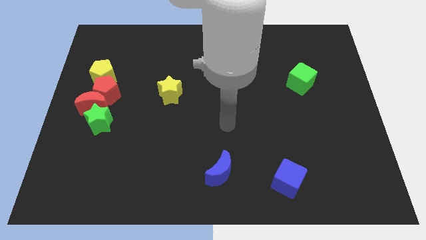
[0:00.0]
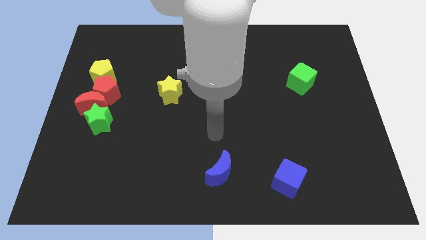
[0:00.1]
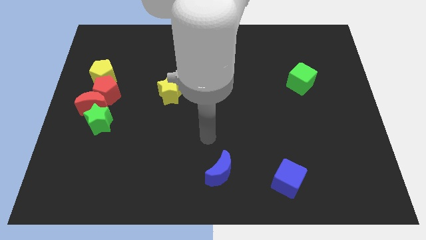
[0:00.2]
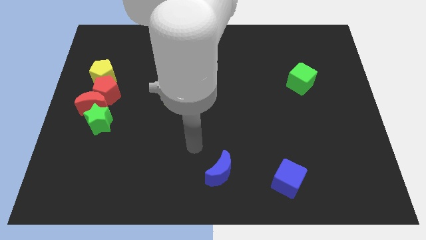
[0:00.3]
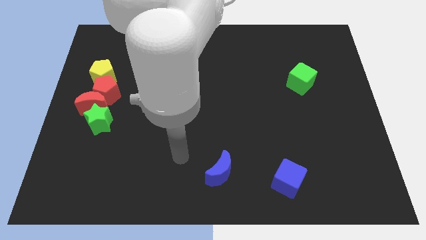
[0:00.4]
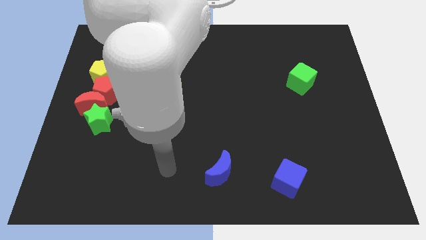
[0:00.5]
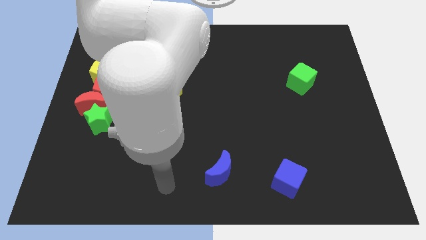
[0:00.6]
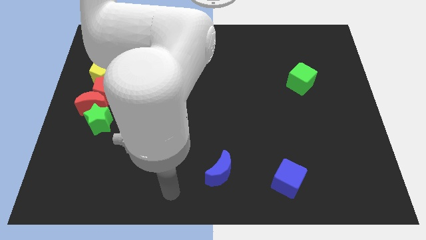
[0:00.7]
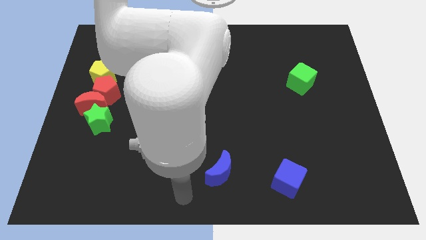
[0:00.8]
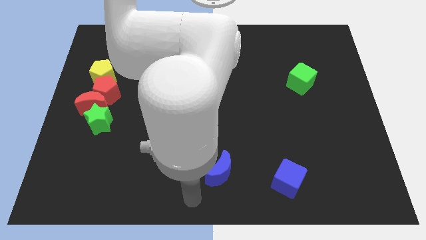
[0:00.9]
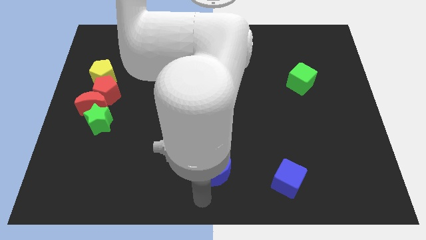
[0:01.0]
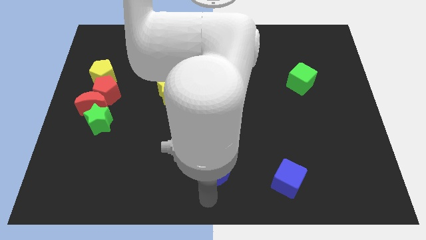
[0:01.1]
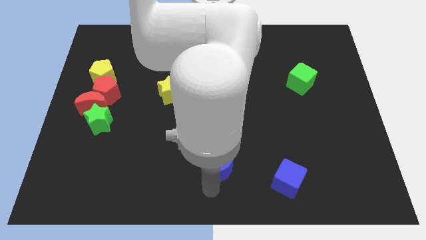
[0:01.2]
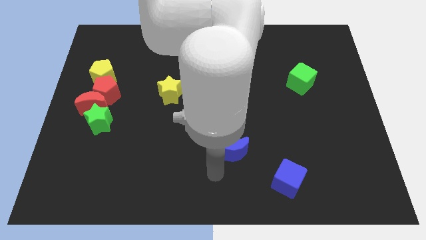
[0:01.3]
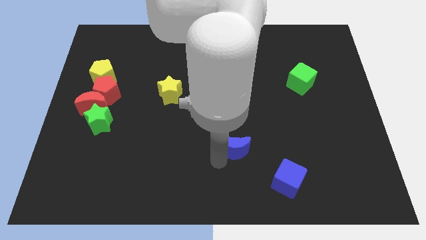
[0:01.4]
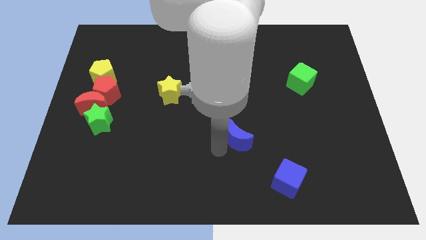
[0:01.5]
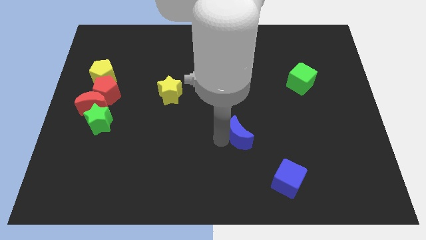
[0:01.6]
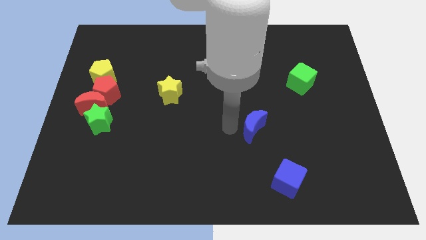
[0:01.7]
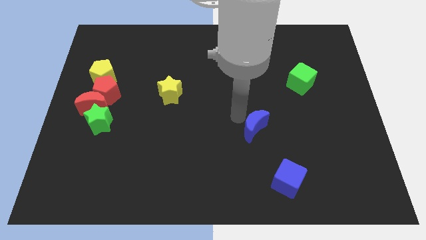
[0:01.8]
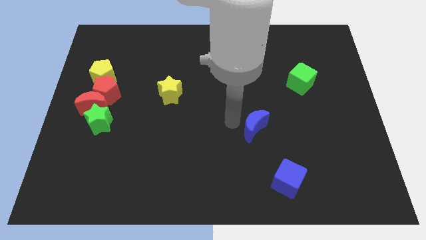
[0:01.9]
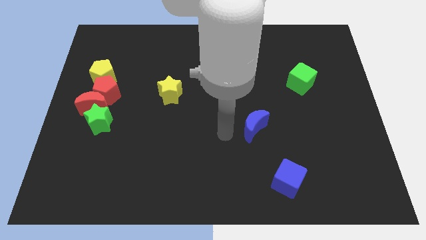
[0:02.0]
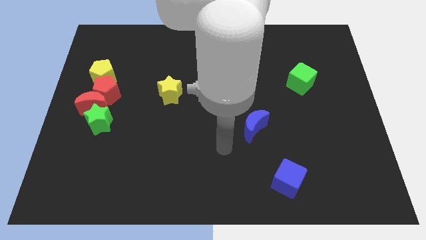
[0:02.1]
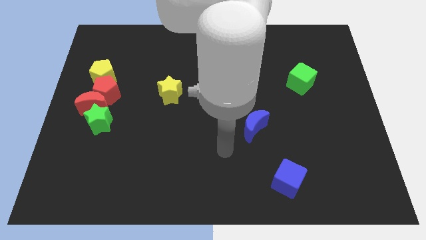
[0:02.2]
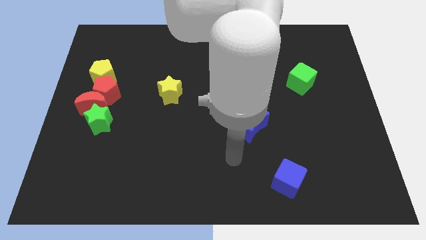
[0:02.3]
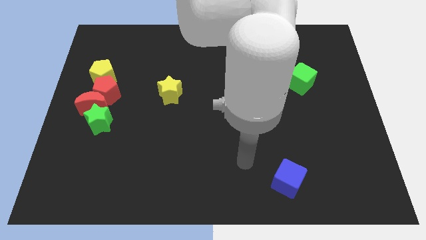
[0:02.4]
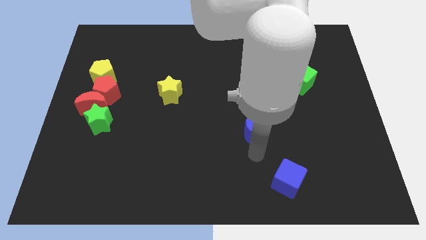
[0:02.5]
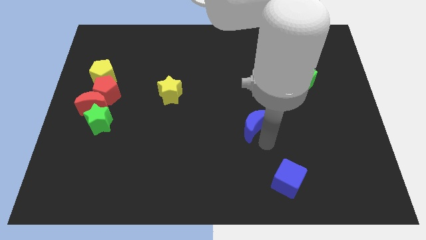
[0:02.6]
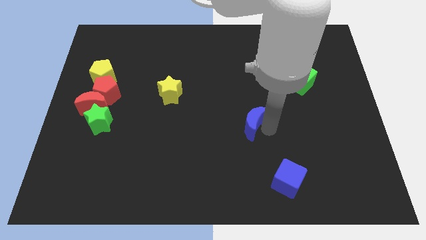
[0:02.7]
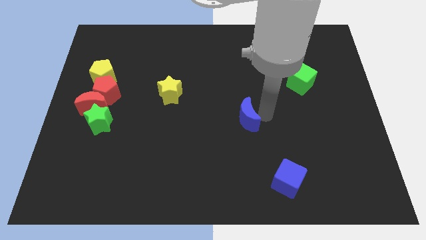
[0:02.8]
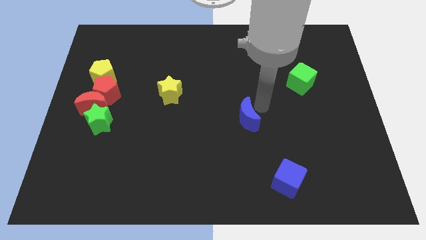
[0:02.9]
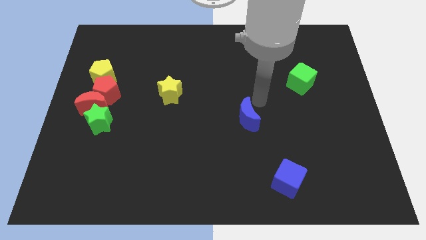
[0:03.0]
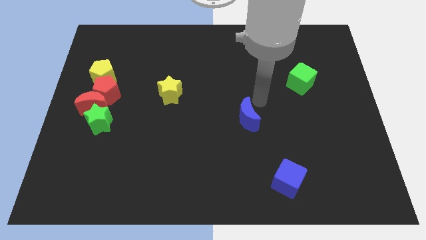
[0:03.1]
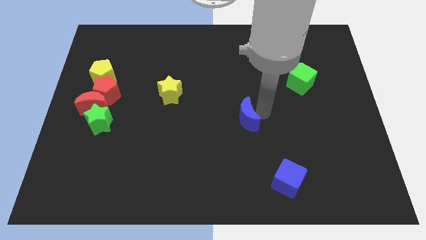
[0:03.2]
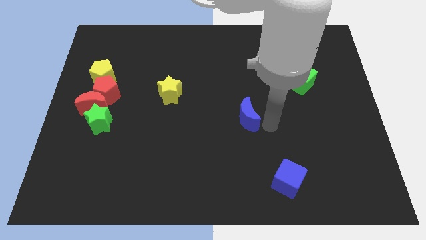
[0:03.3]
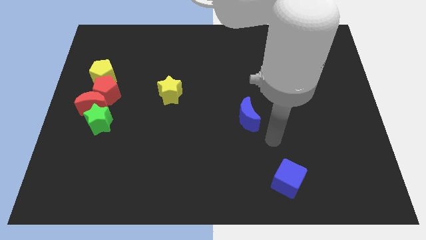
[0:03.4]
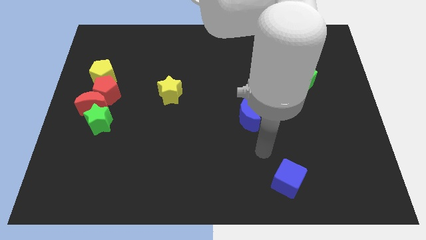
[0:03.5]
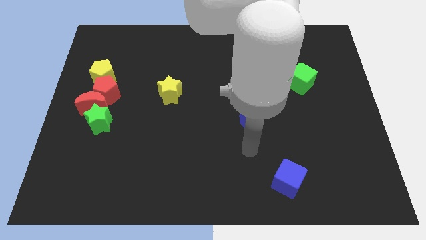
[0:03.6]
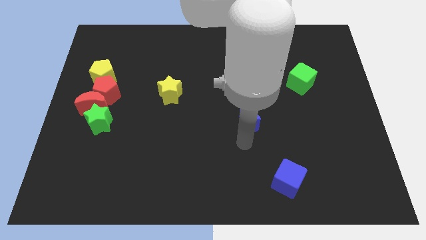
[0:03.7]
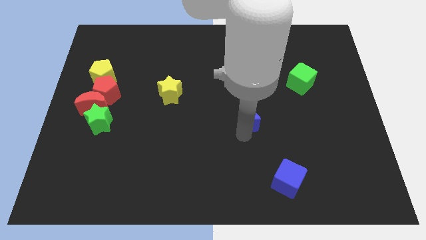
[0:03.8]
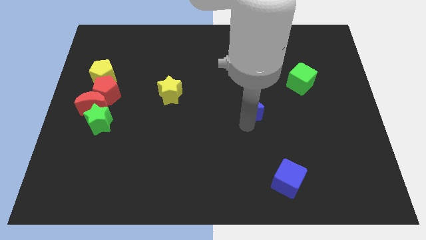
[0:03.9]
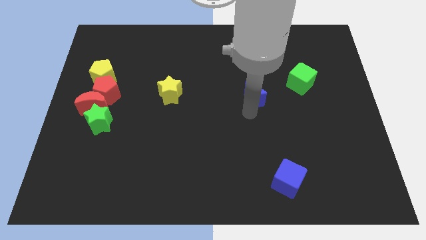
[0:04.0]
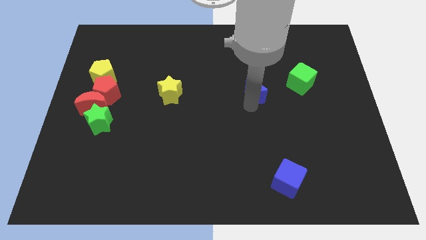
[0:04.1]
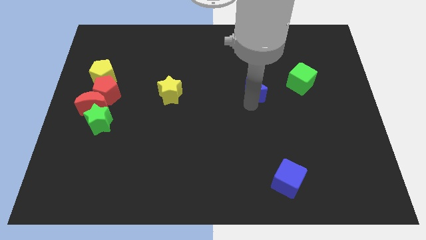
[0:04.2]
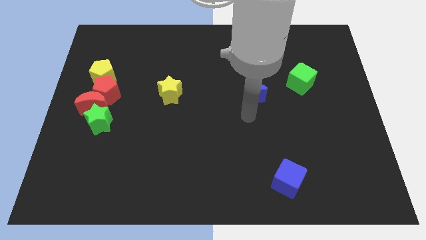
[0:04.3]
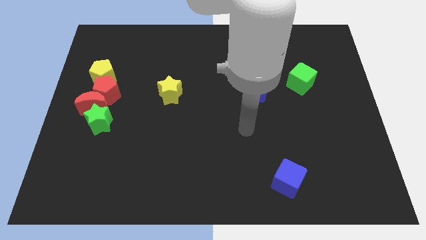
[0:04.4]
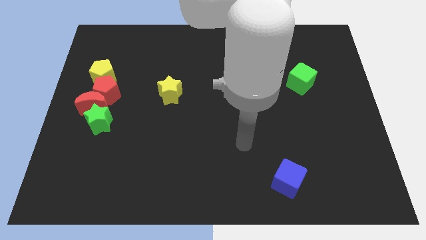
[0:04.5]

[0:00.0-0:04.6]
move the blue moon to the green cube

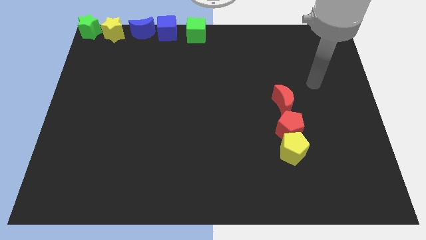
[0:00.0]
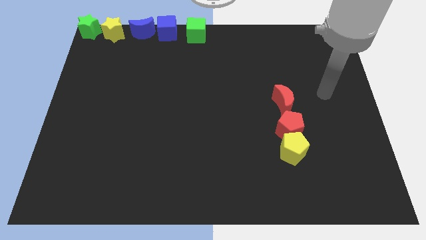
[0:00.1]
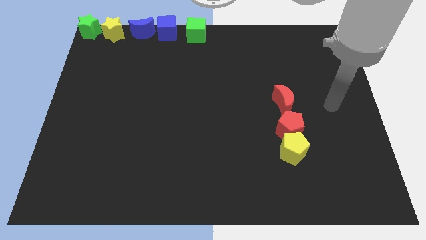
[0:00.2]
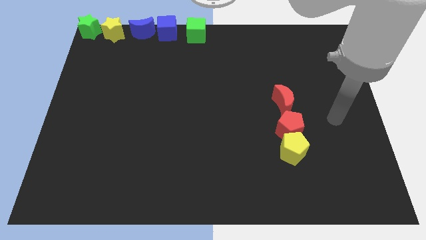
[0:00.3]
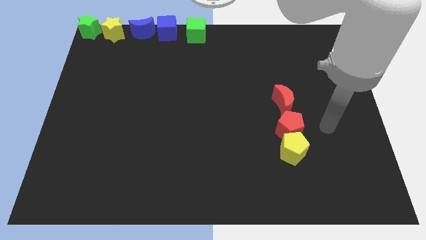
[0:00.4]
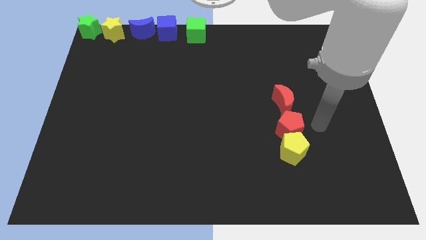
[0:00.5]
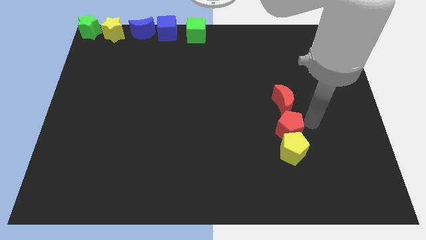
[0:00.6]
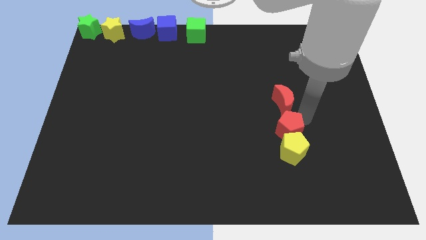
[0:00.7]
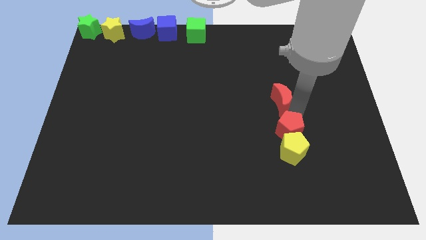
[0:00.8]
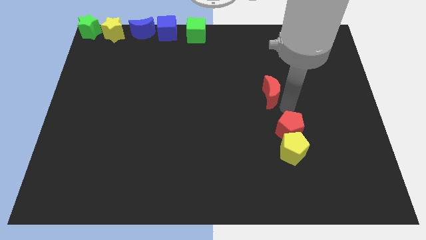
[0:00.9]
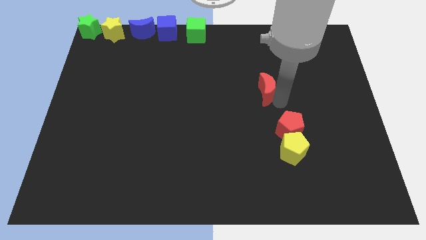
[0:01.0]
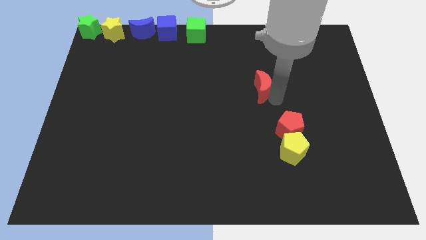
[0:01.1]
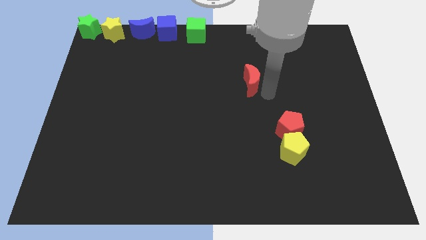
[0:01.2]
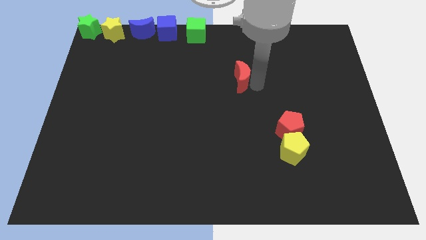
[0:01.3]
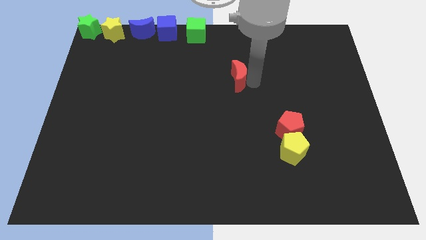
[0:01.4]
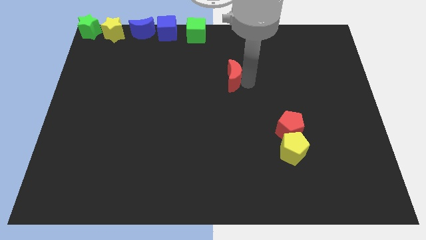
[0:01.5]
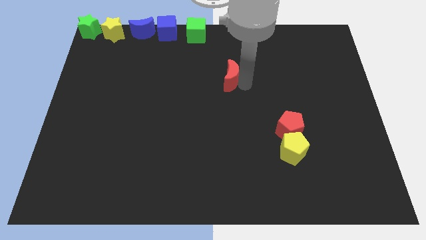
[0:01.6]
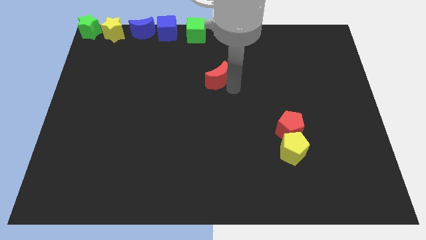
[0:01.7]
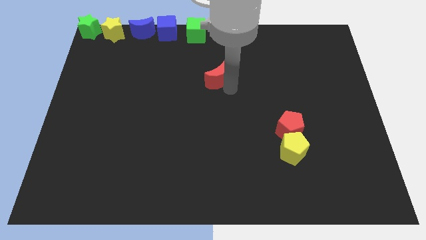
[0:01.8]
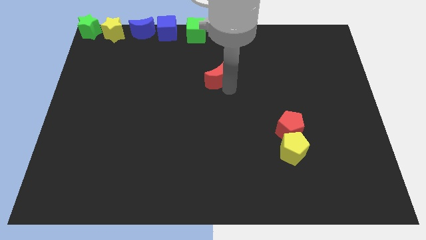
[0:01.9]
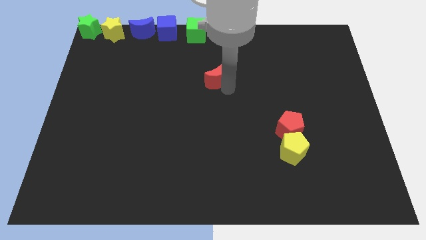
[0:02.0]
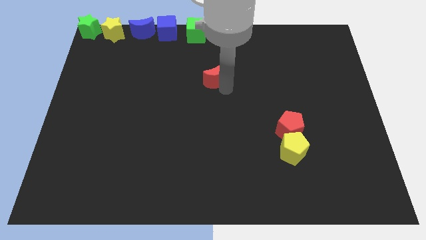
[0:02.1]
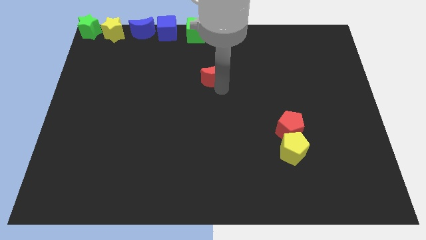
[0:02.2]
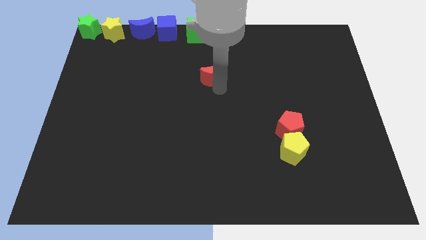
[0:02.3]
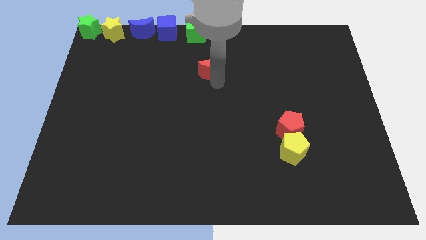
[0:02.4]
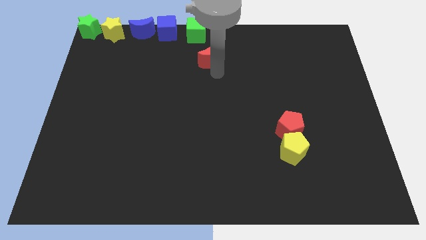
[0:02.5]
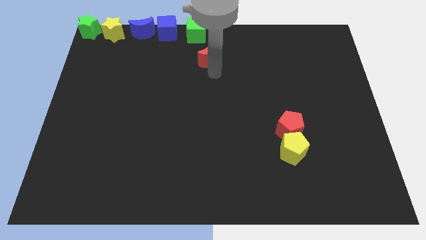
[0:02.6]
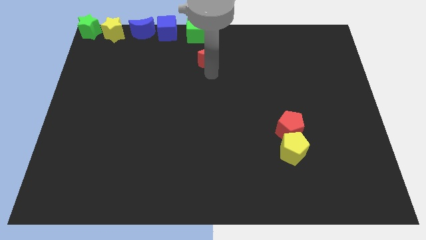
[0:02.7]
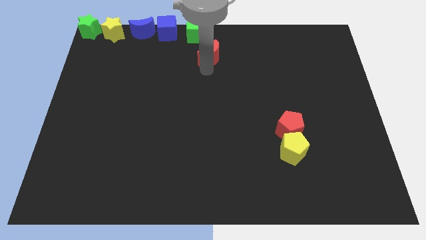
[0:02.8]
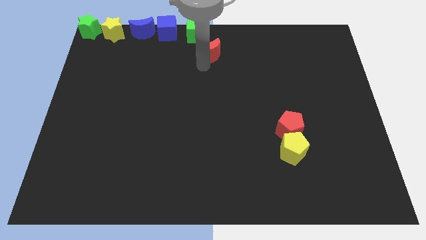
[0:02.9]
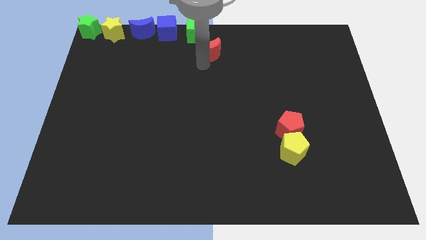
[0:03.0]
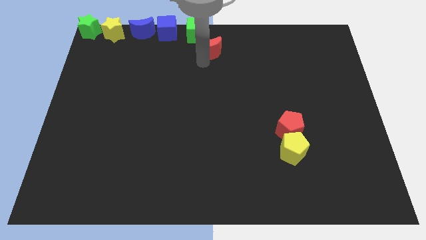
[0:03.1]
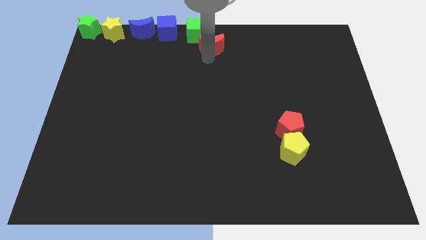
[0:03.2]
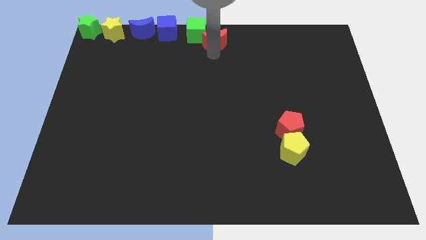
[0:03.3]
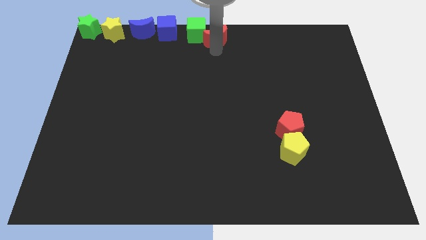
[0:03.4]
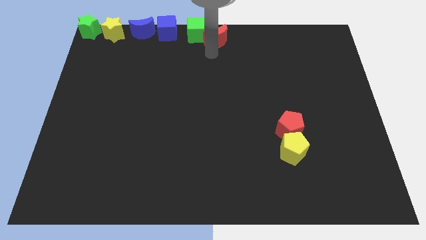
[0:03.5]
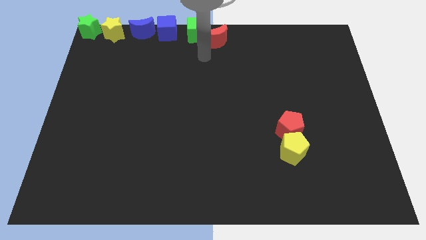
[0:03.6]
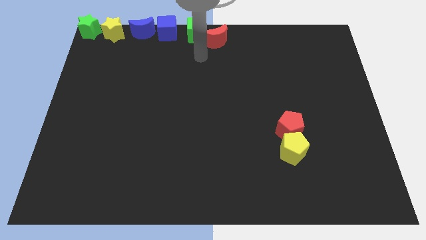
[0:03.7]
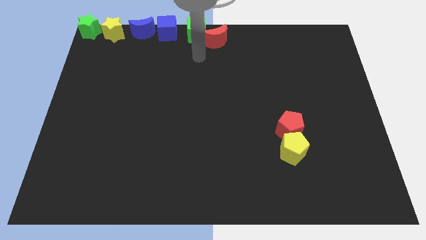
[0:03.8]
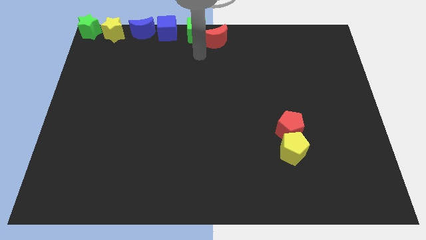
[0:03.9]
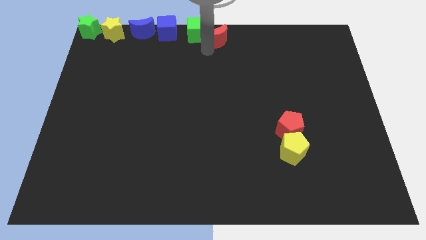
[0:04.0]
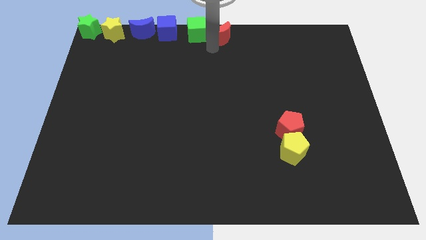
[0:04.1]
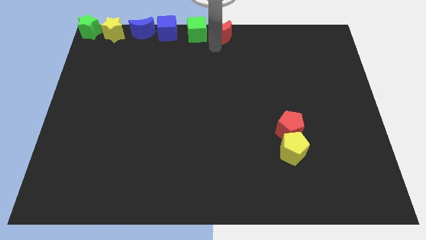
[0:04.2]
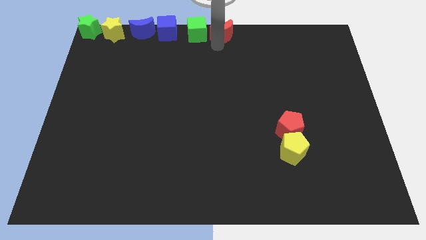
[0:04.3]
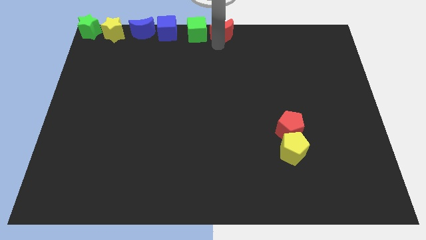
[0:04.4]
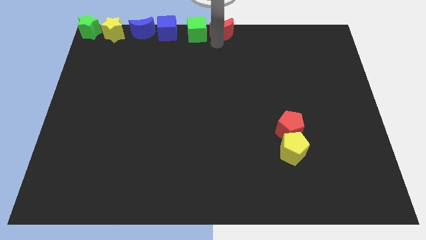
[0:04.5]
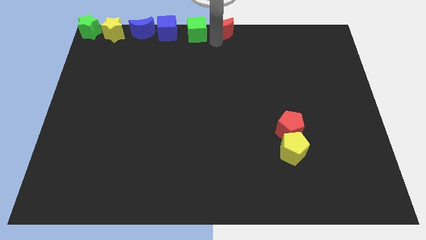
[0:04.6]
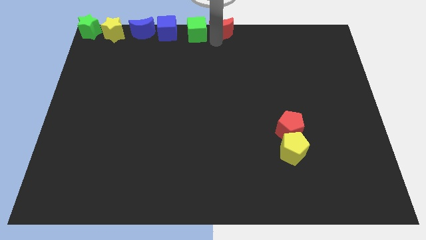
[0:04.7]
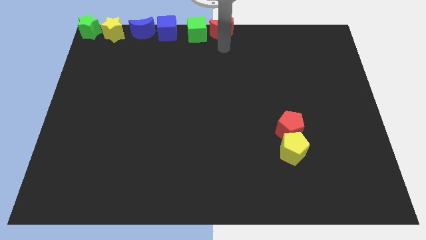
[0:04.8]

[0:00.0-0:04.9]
push the red moon to the top center
